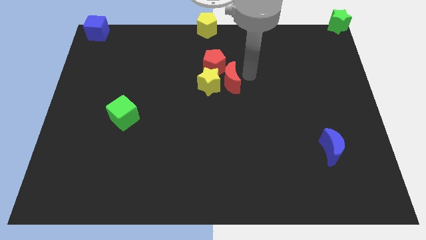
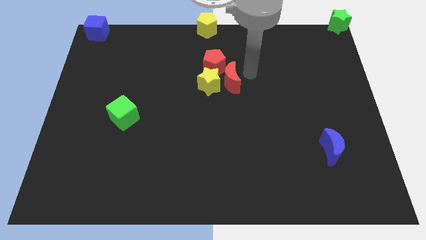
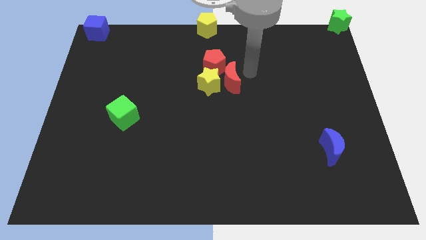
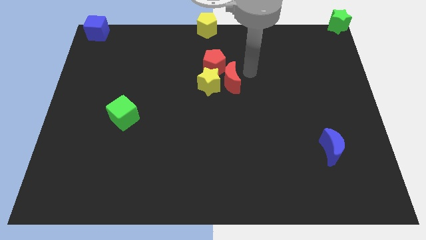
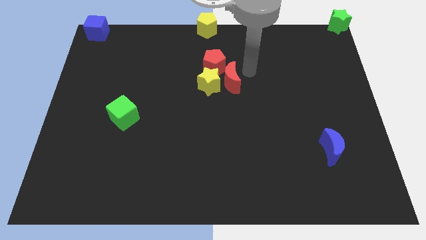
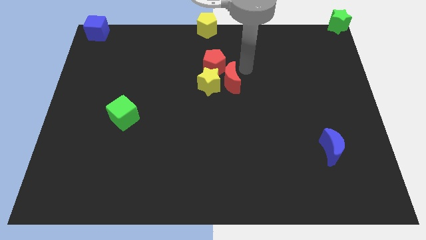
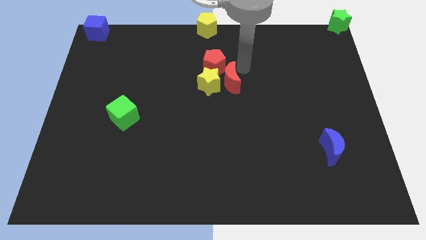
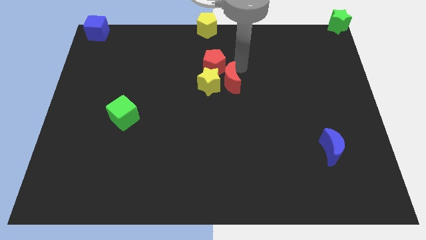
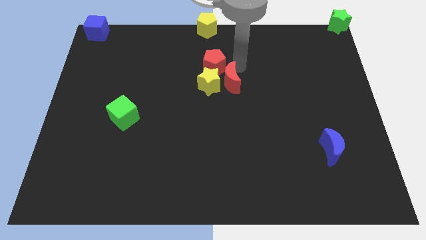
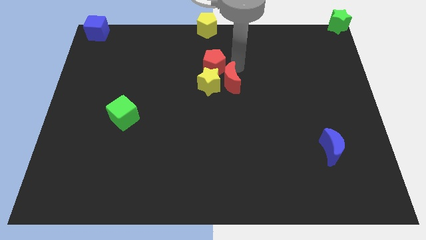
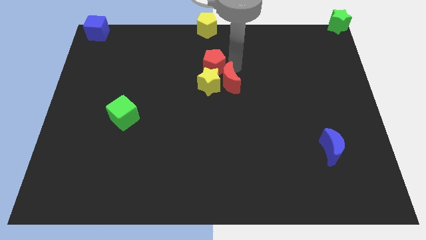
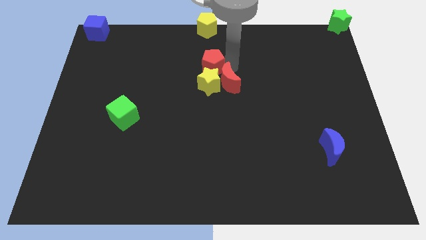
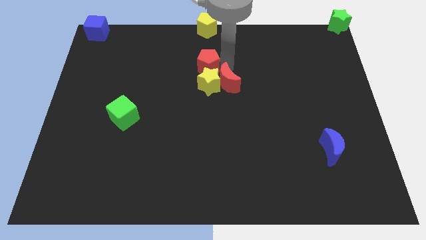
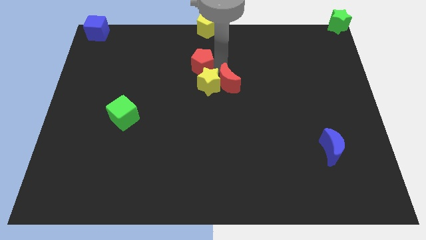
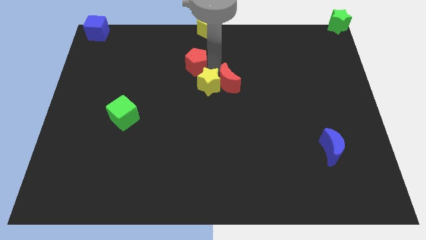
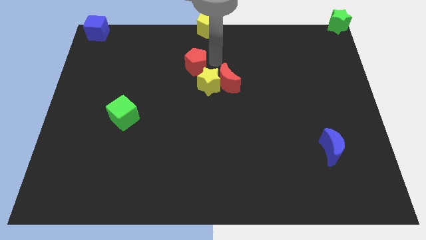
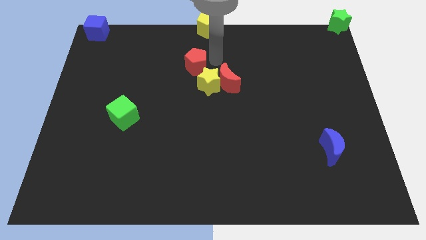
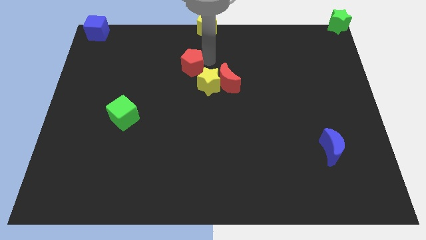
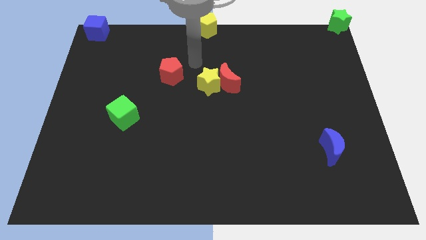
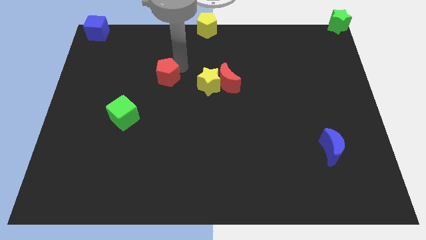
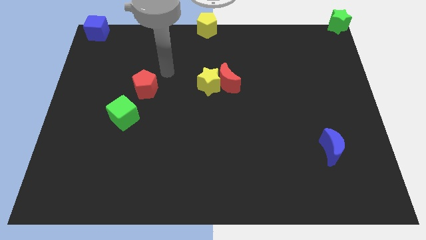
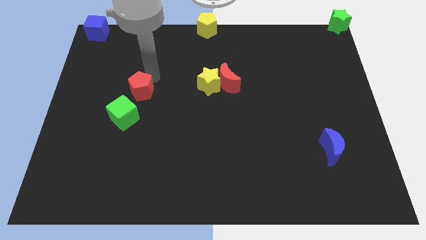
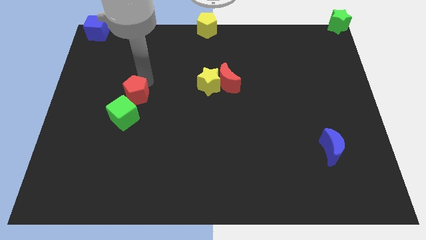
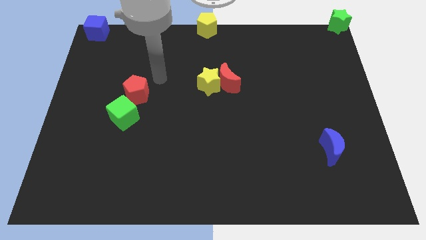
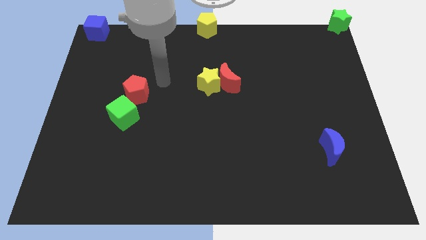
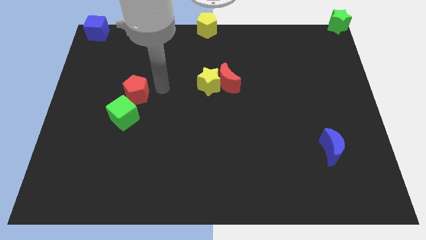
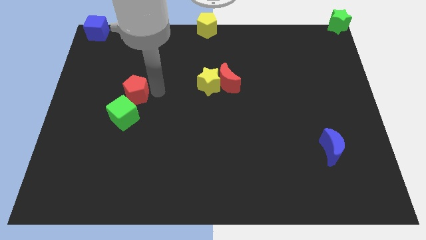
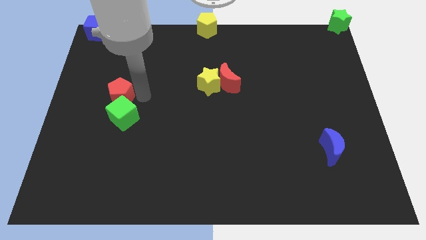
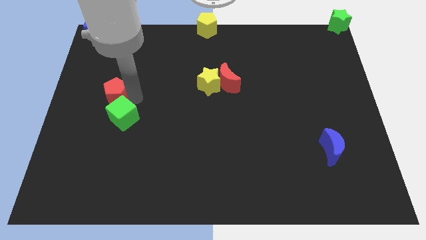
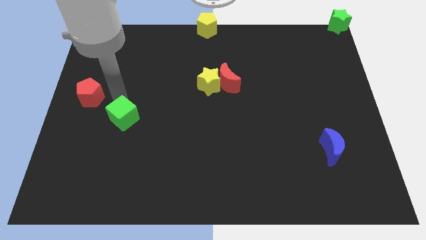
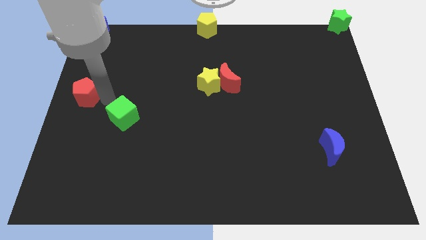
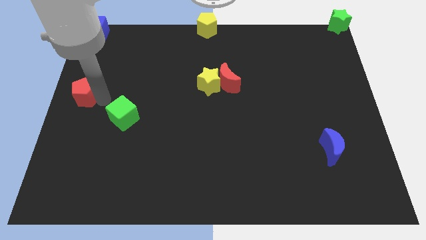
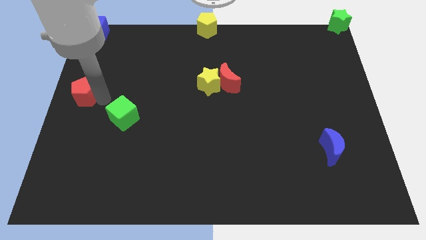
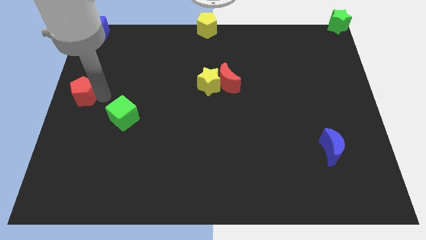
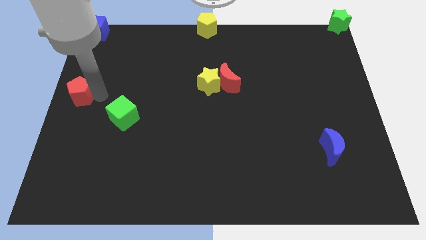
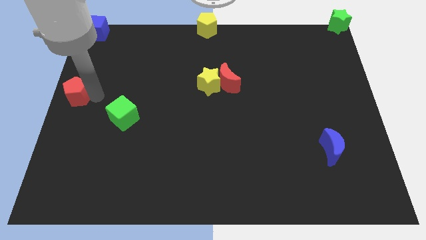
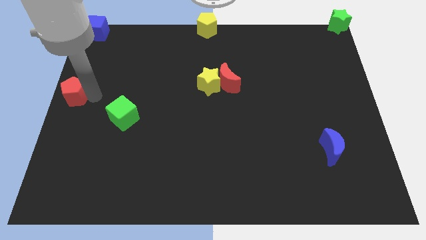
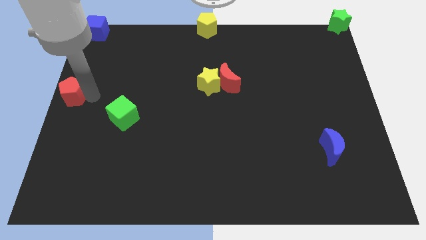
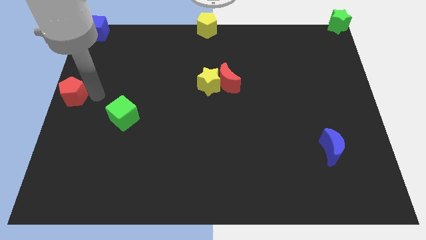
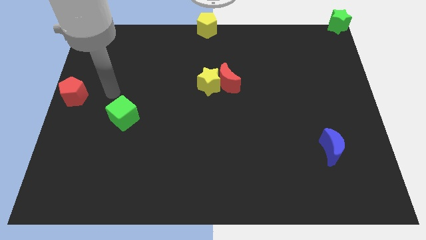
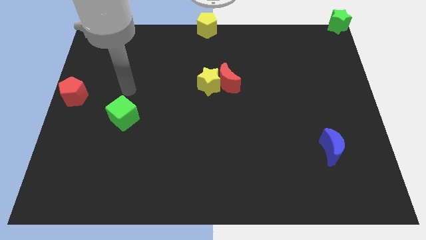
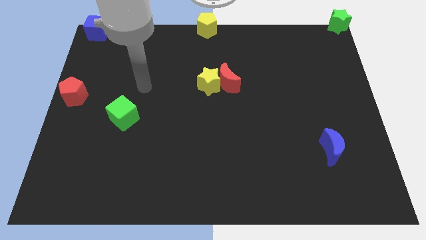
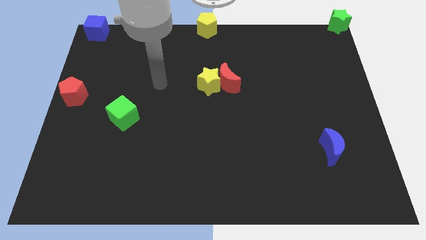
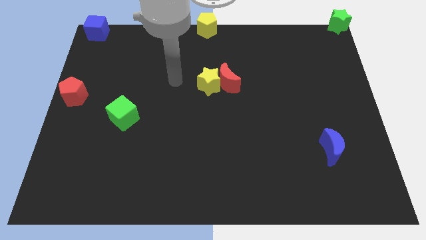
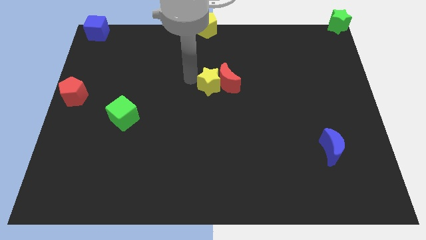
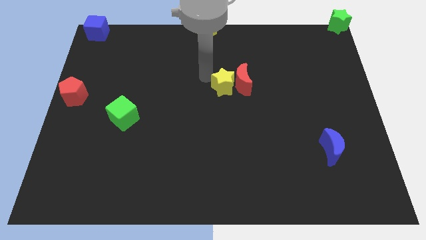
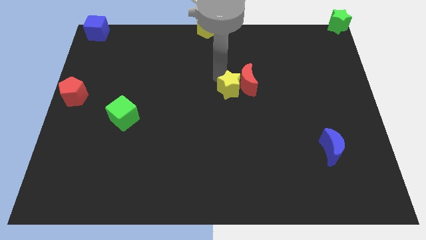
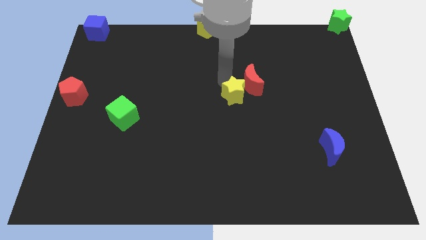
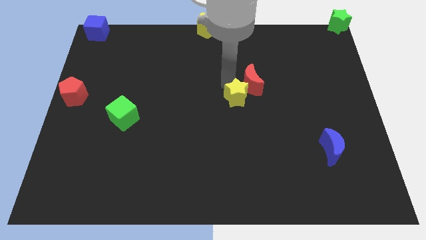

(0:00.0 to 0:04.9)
slide the red pentagon to the centre left of the board

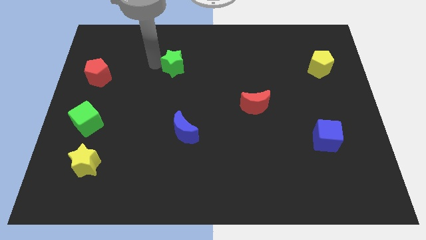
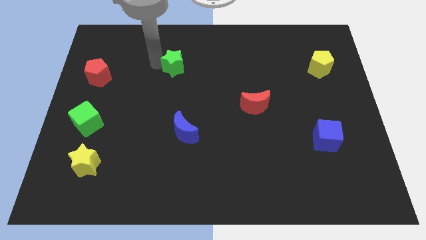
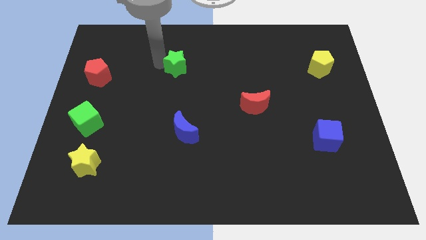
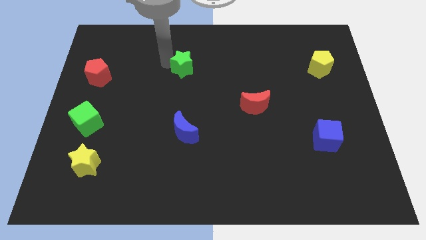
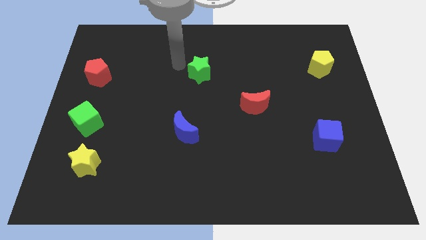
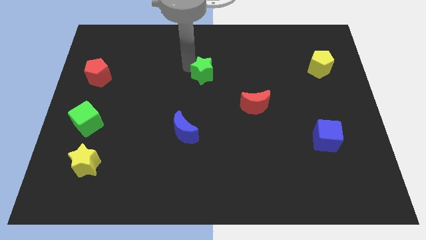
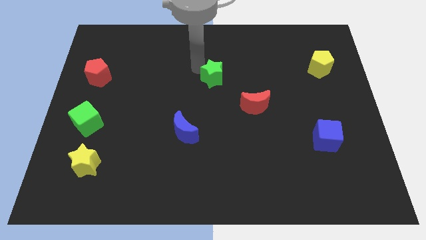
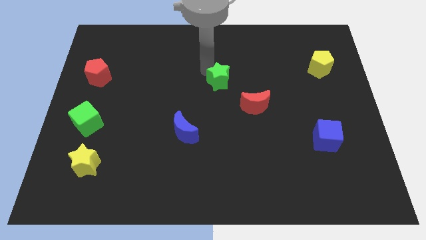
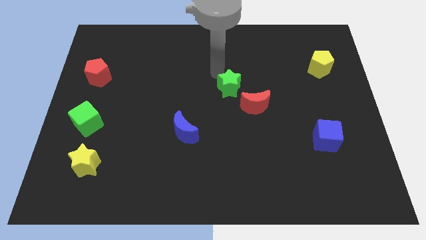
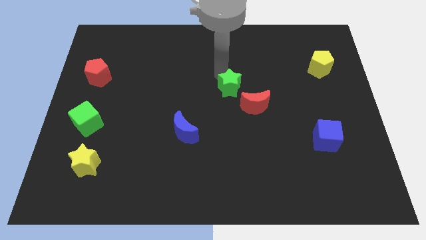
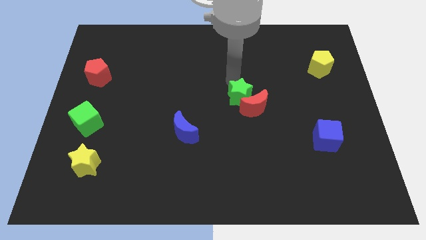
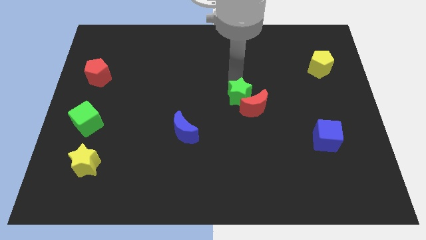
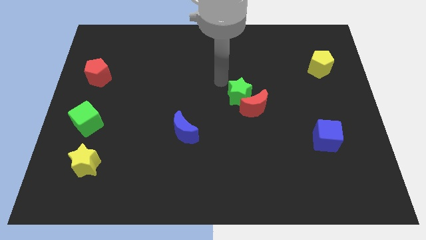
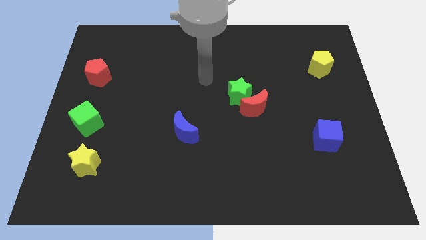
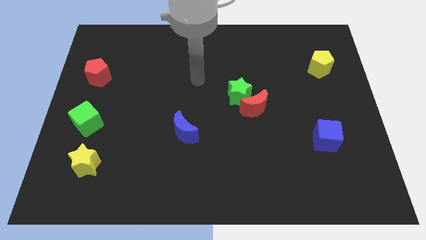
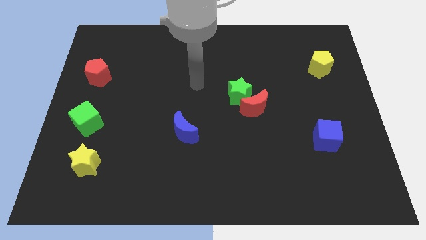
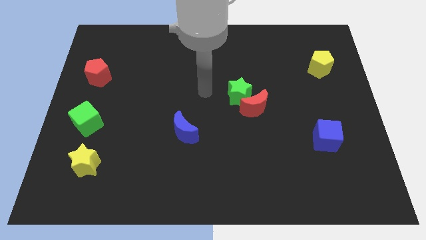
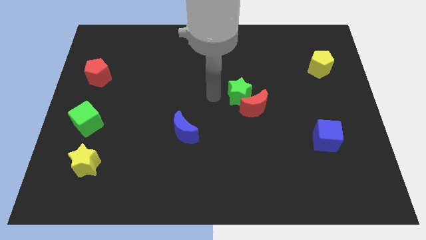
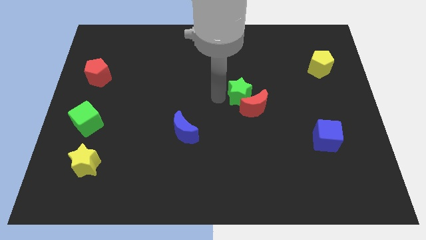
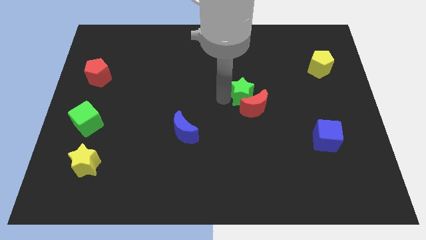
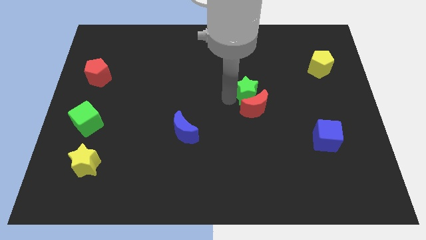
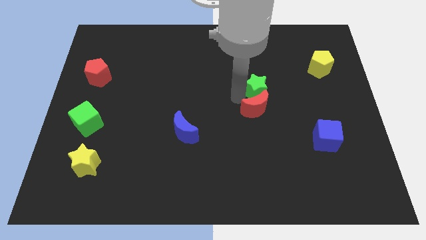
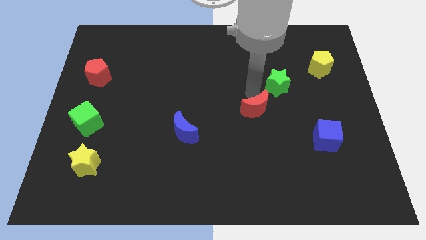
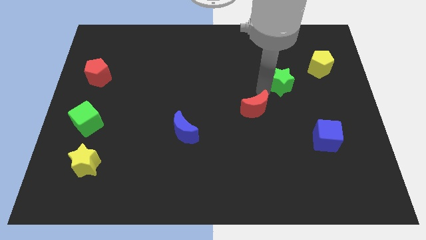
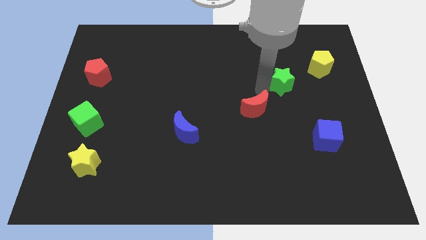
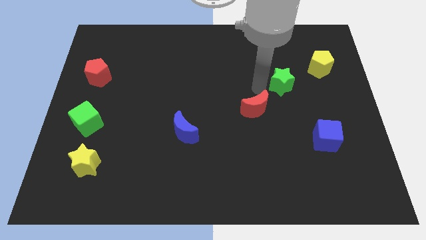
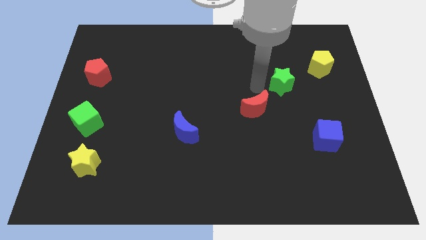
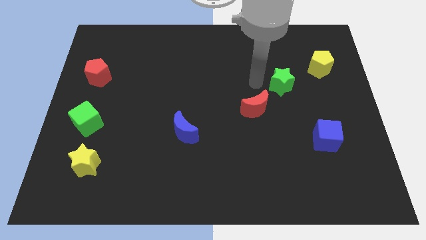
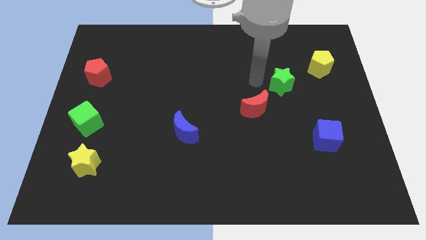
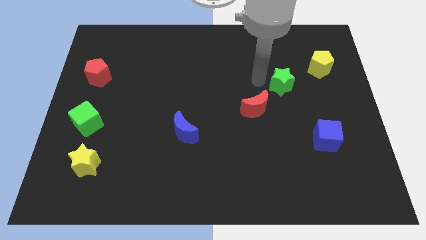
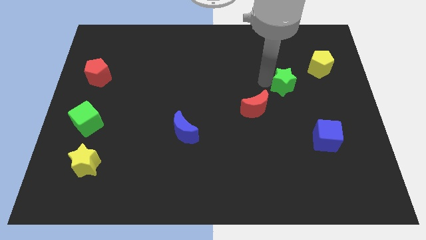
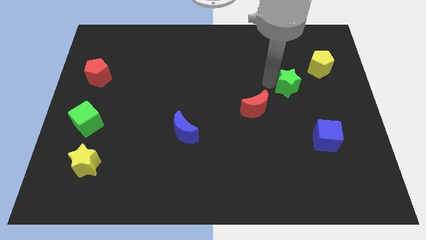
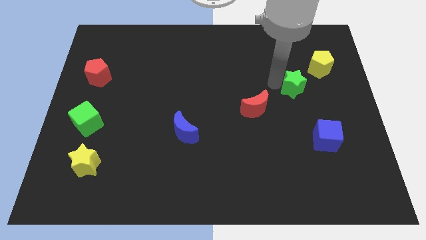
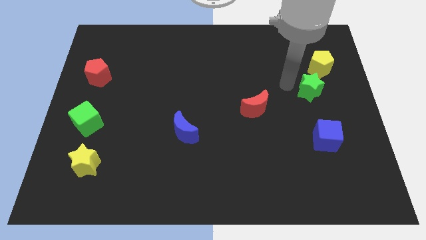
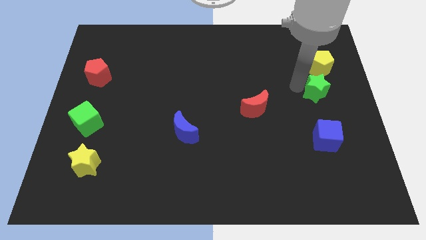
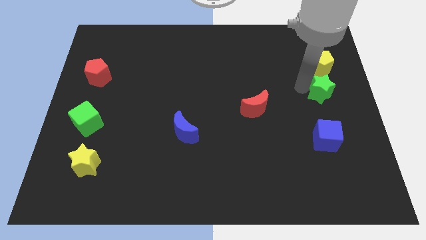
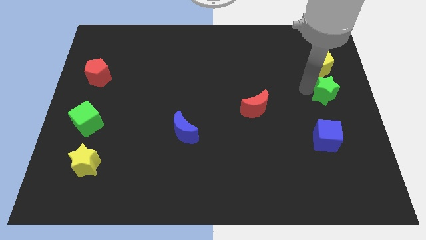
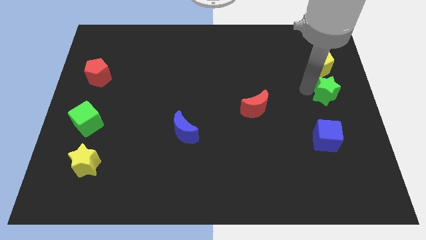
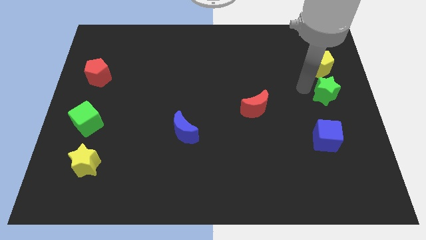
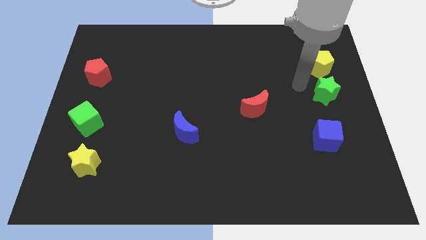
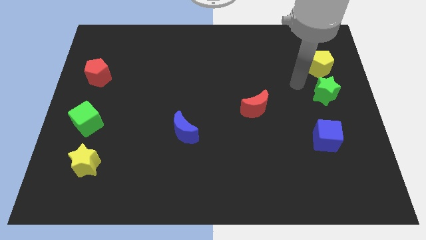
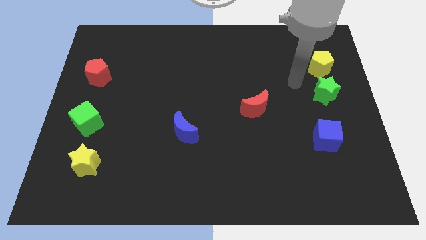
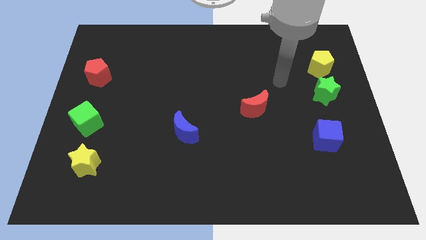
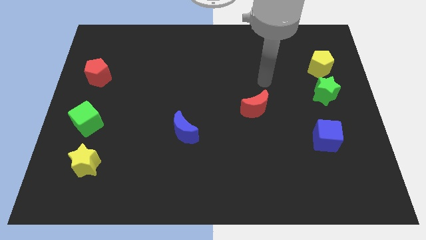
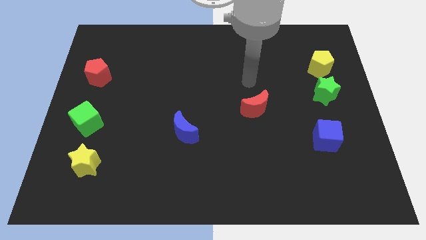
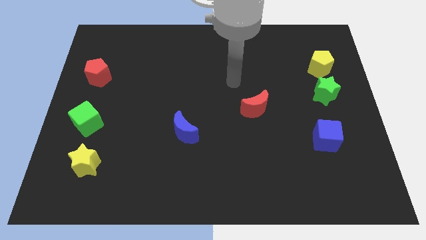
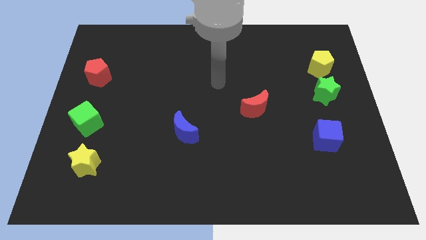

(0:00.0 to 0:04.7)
place the green star below the yellow pentagon
